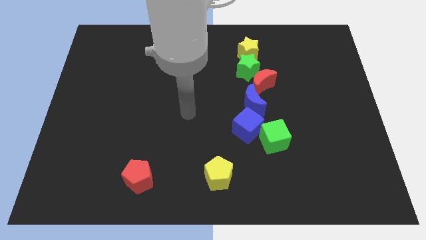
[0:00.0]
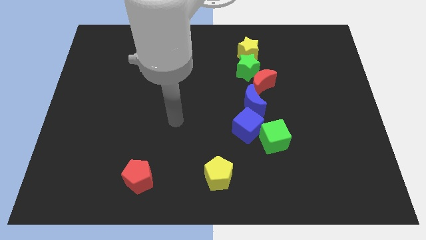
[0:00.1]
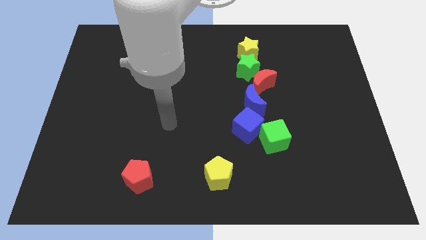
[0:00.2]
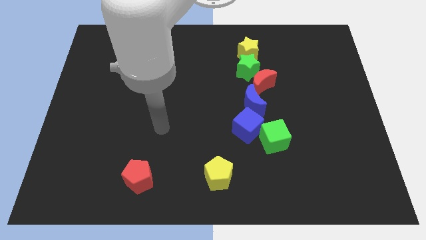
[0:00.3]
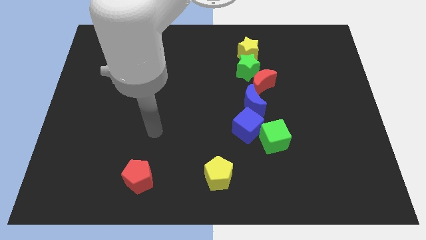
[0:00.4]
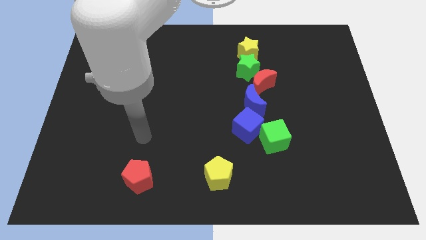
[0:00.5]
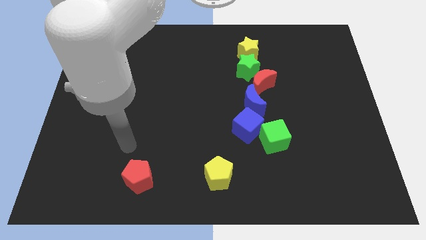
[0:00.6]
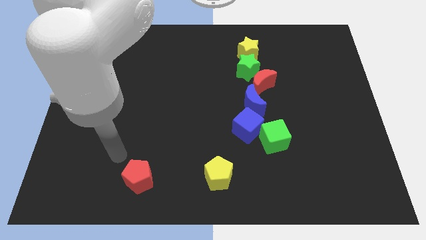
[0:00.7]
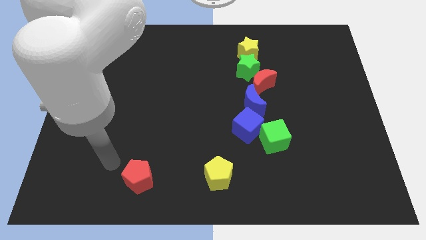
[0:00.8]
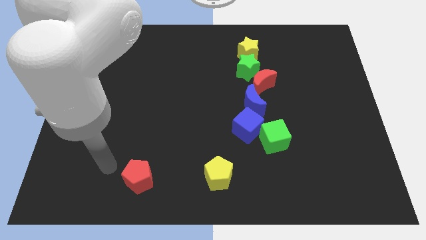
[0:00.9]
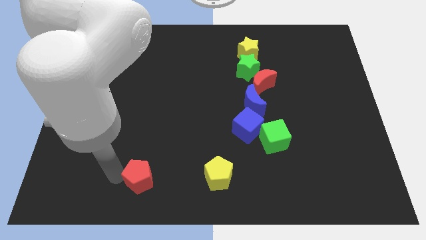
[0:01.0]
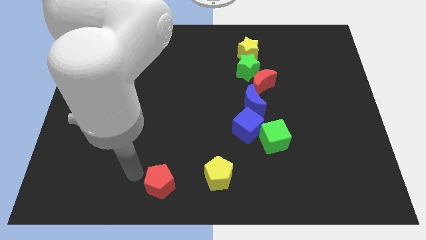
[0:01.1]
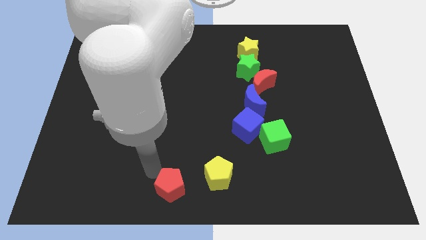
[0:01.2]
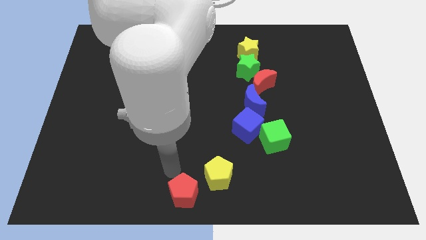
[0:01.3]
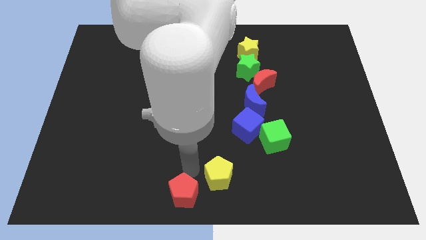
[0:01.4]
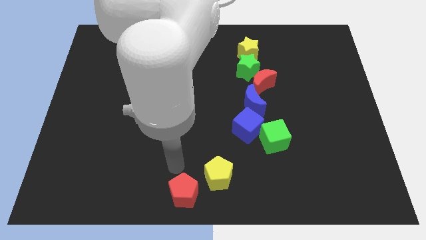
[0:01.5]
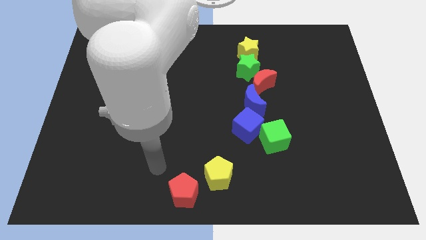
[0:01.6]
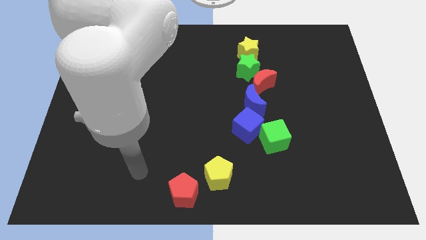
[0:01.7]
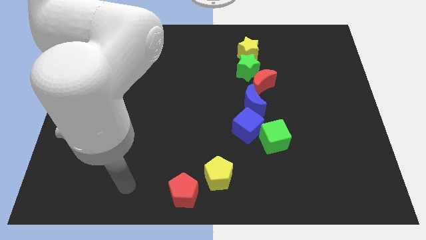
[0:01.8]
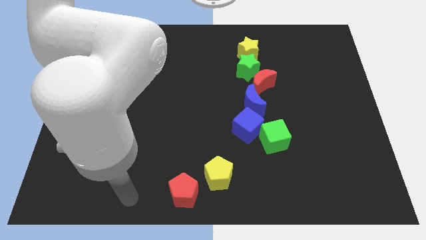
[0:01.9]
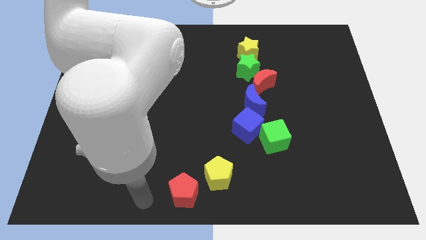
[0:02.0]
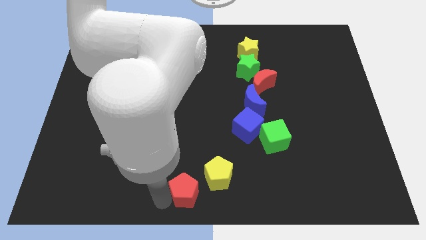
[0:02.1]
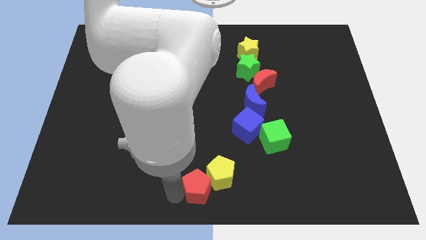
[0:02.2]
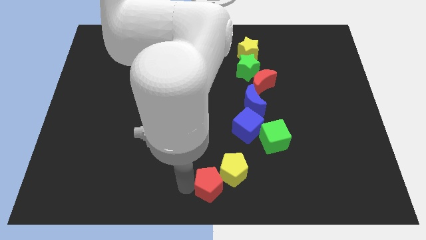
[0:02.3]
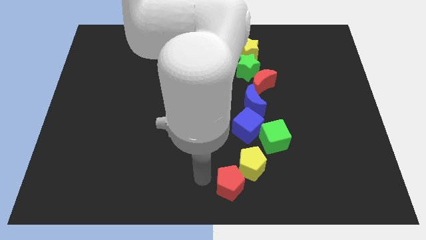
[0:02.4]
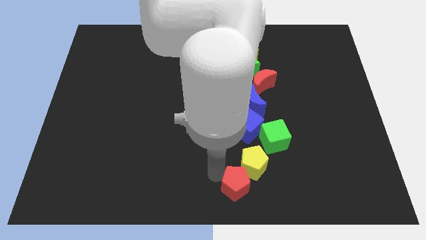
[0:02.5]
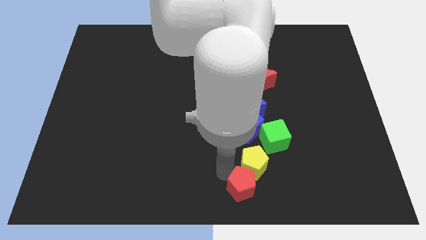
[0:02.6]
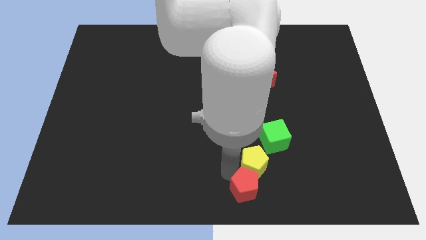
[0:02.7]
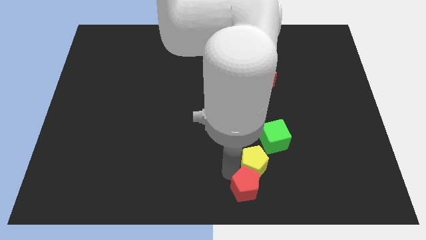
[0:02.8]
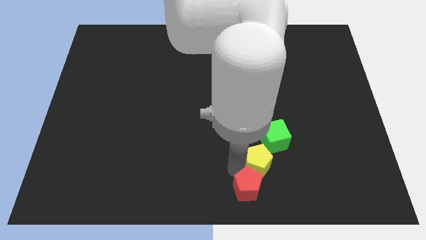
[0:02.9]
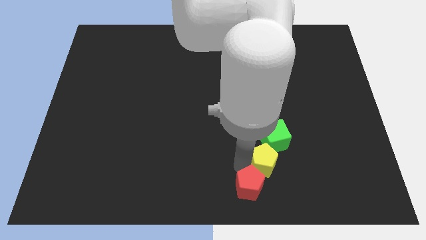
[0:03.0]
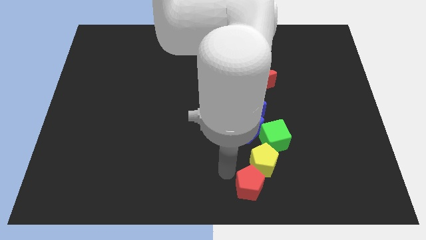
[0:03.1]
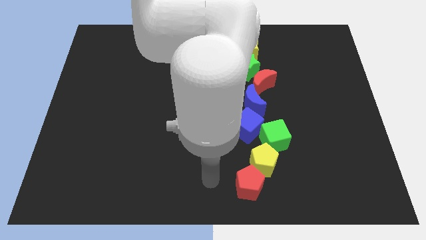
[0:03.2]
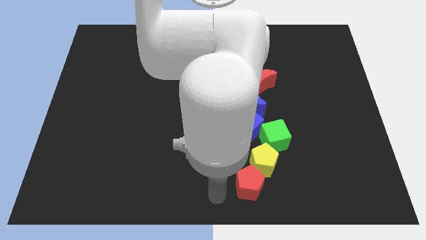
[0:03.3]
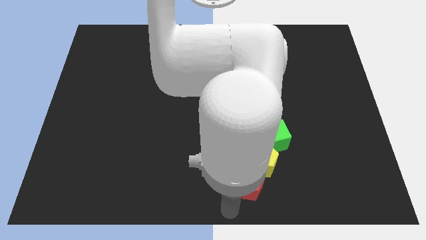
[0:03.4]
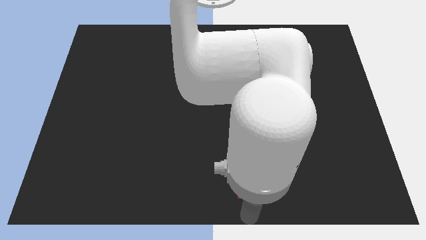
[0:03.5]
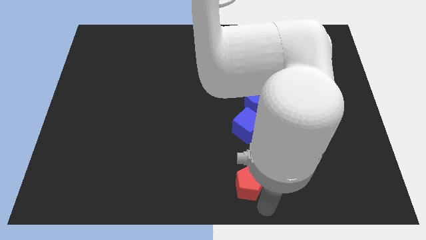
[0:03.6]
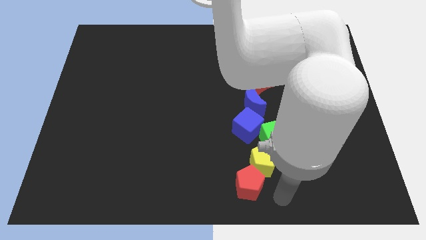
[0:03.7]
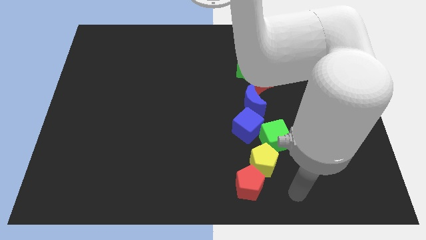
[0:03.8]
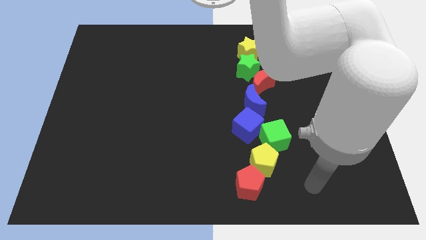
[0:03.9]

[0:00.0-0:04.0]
move pentagons diagonally below to the green cube

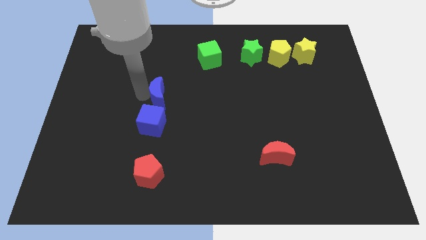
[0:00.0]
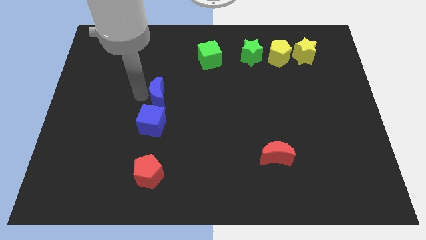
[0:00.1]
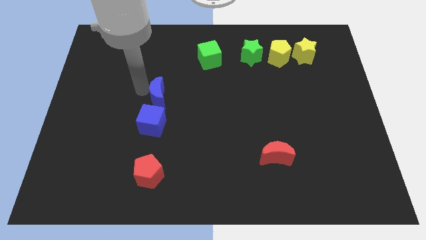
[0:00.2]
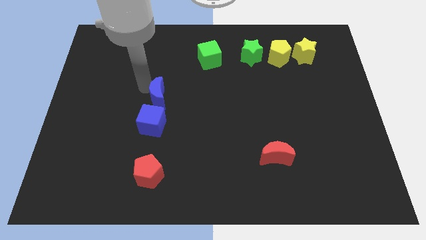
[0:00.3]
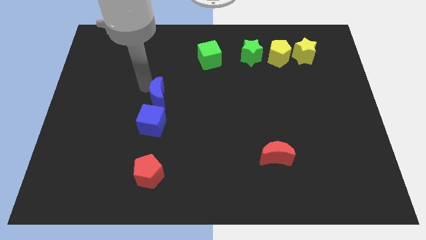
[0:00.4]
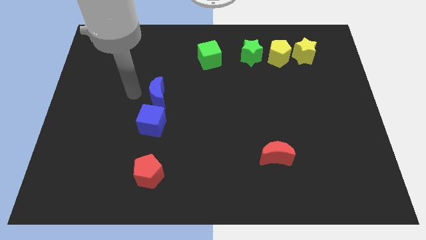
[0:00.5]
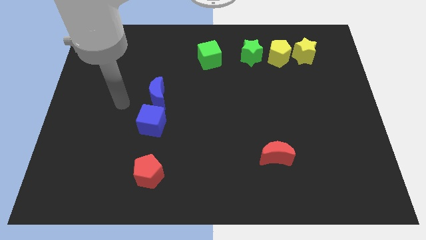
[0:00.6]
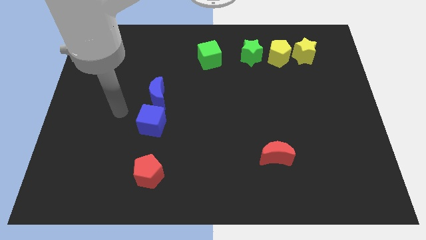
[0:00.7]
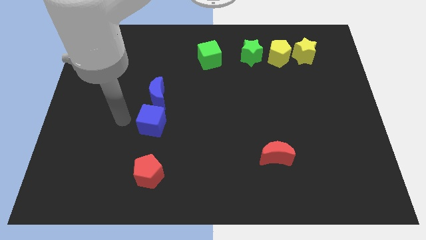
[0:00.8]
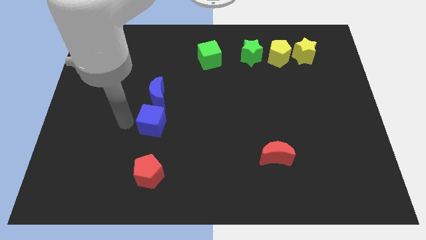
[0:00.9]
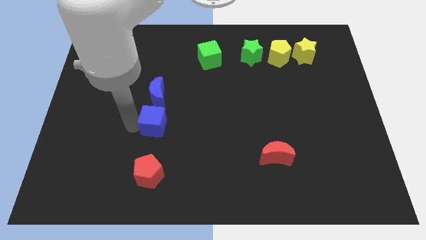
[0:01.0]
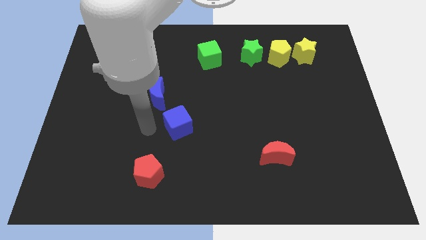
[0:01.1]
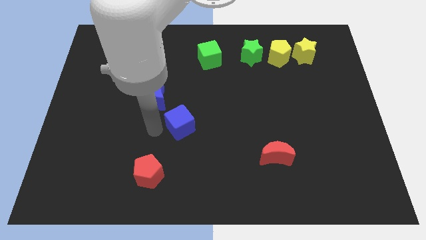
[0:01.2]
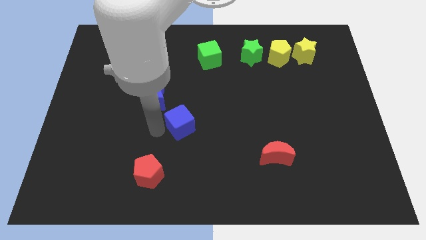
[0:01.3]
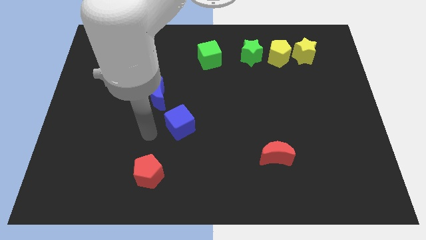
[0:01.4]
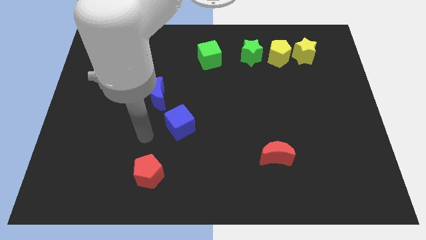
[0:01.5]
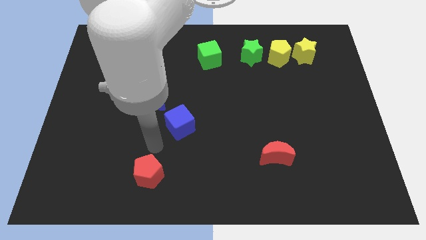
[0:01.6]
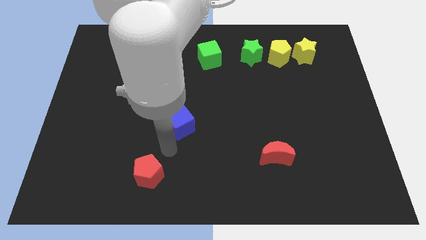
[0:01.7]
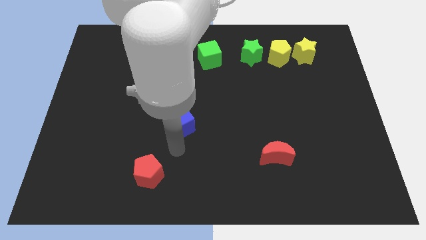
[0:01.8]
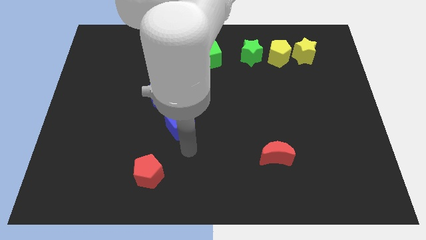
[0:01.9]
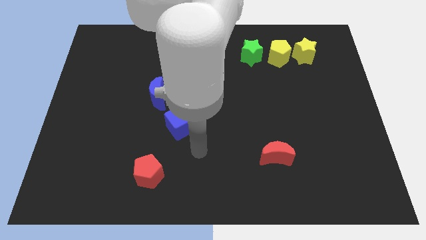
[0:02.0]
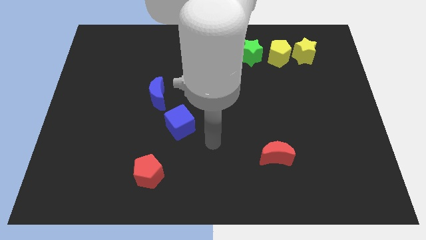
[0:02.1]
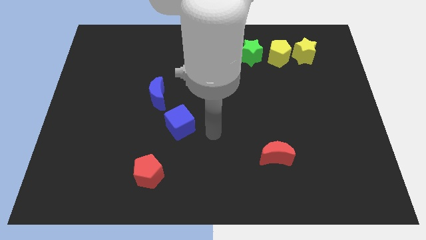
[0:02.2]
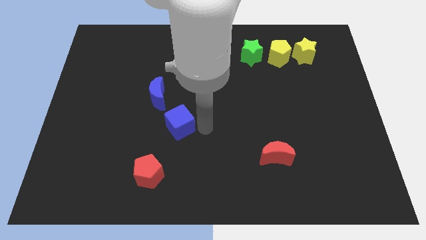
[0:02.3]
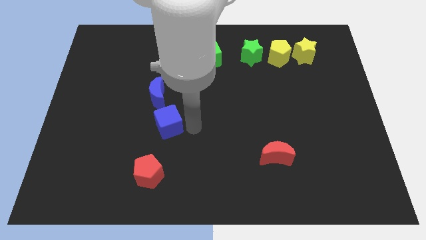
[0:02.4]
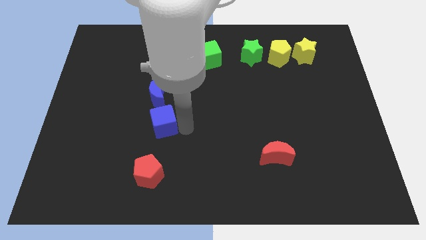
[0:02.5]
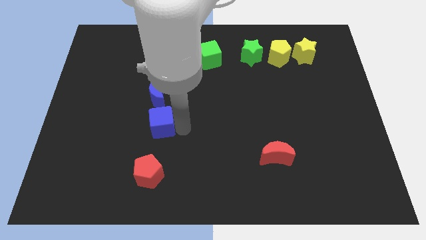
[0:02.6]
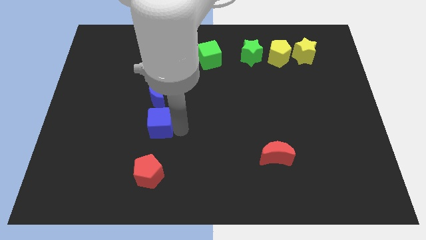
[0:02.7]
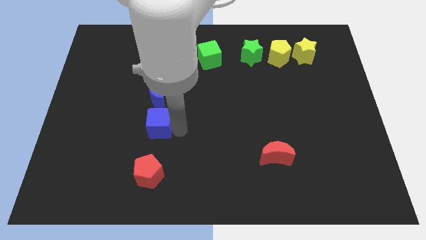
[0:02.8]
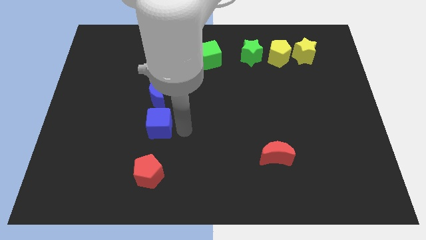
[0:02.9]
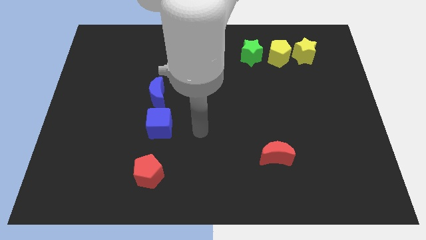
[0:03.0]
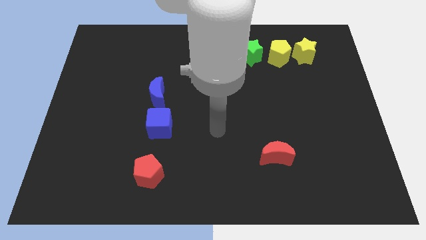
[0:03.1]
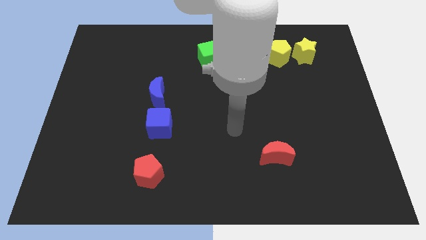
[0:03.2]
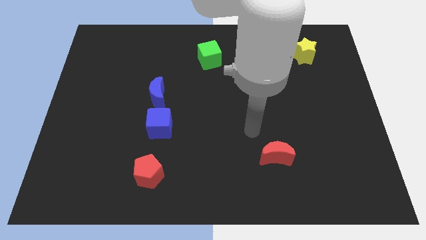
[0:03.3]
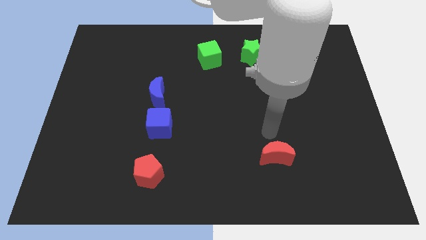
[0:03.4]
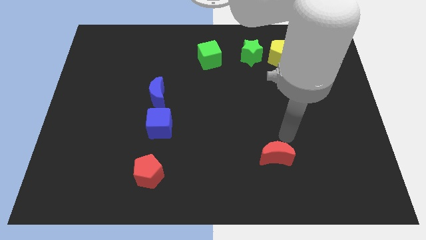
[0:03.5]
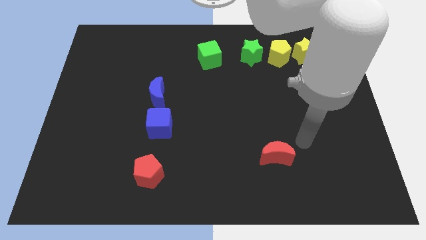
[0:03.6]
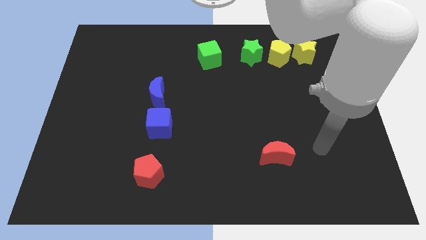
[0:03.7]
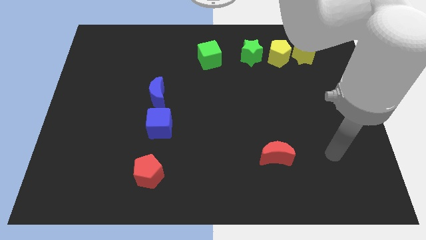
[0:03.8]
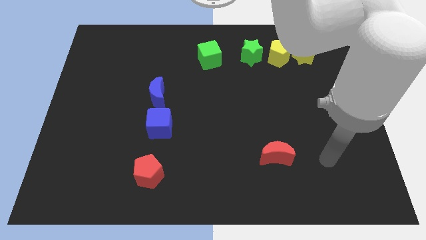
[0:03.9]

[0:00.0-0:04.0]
adjust the blue square below the blue moon

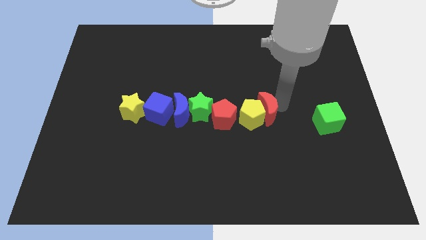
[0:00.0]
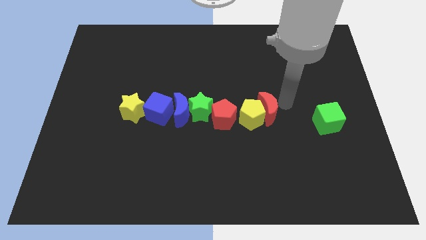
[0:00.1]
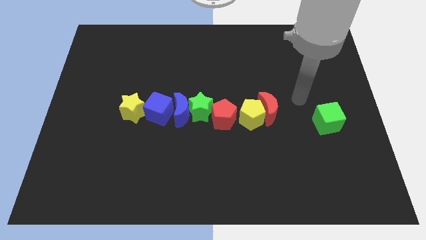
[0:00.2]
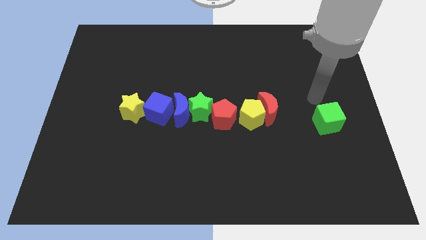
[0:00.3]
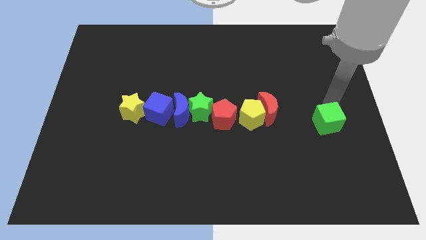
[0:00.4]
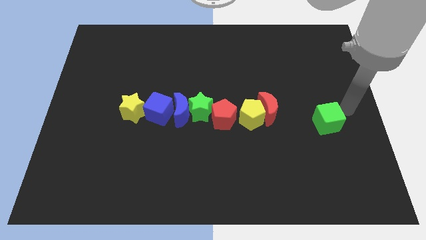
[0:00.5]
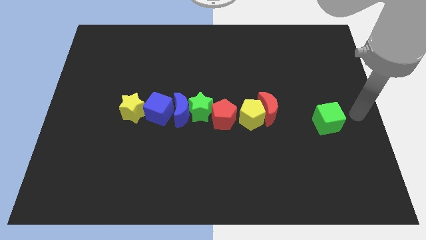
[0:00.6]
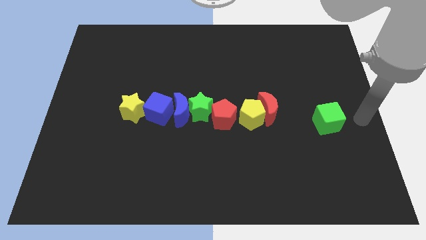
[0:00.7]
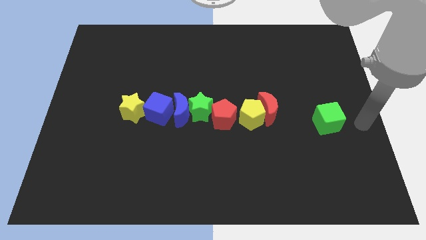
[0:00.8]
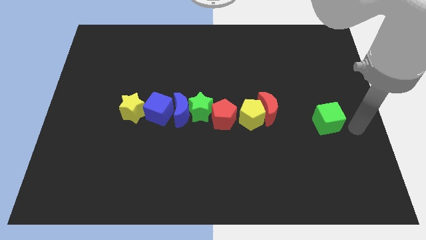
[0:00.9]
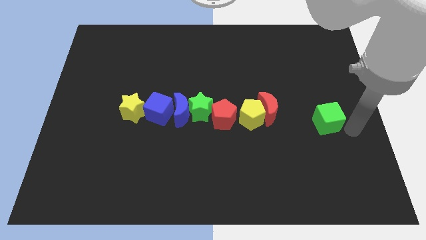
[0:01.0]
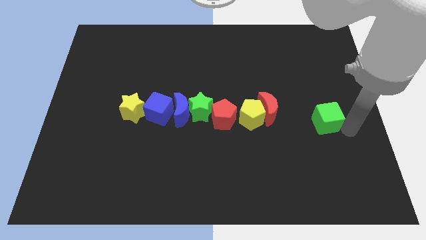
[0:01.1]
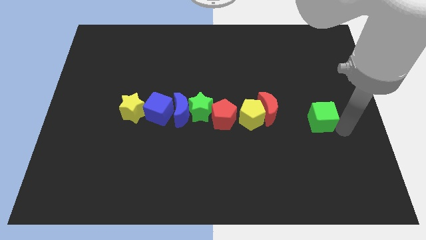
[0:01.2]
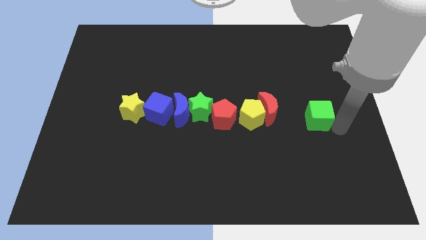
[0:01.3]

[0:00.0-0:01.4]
move your arm away from the red moon
